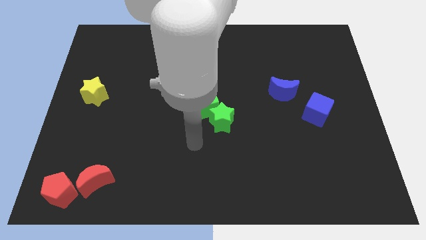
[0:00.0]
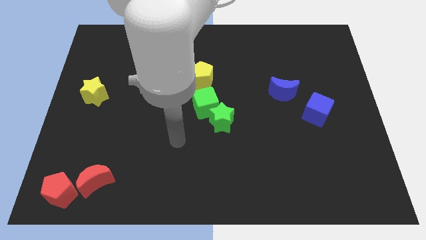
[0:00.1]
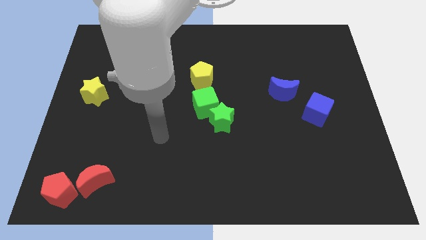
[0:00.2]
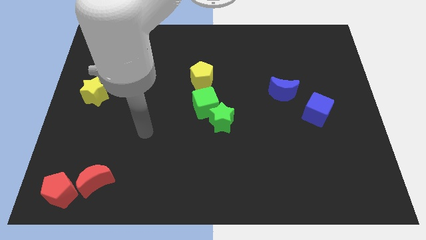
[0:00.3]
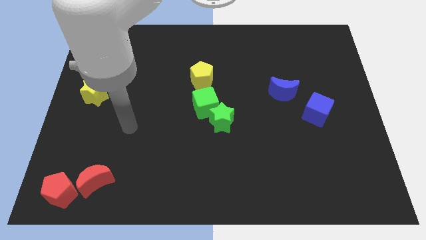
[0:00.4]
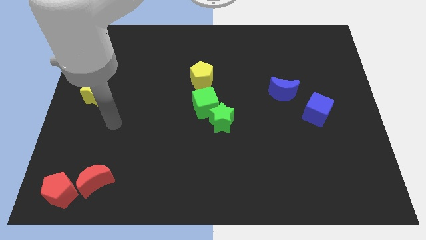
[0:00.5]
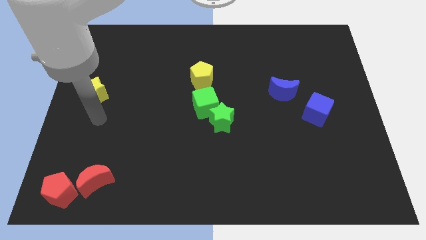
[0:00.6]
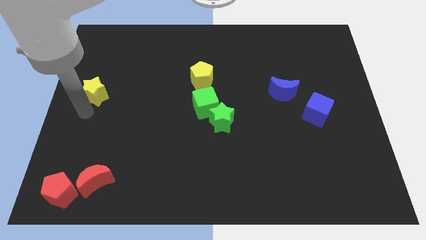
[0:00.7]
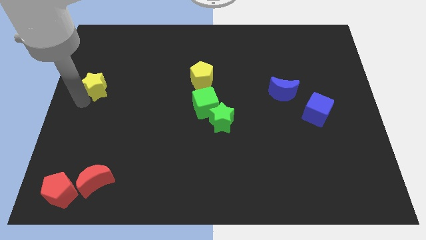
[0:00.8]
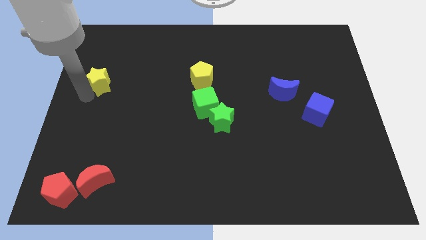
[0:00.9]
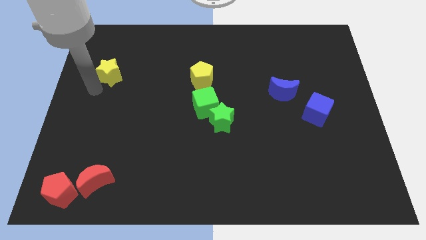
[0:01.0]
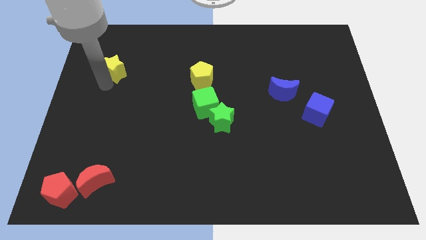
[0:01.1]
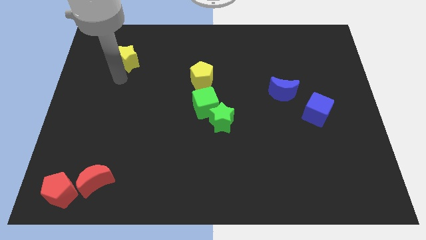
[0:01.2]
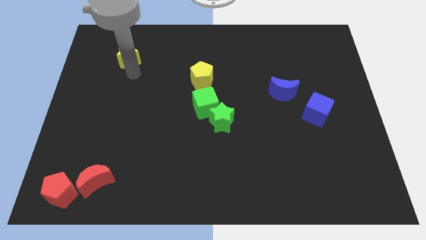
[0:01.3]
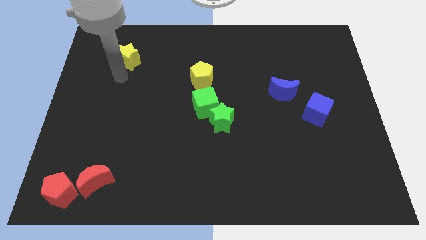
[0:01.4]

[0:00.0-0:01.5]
push the yellow star upwards

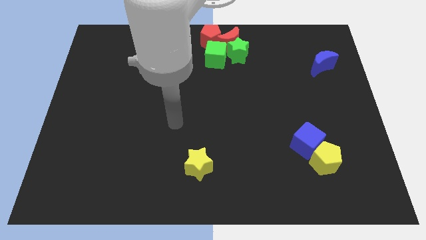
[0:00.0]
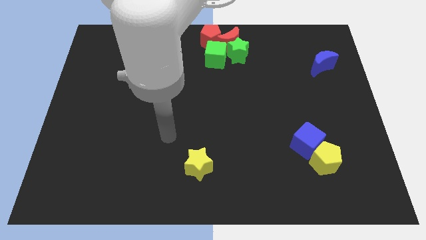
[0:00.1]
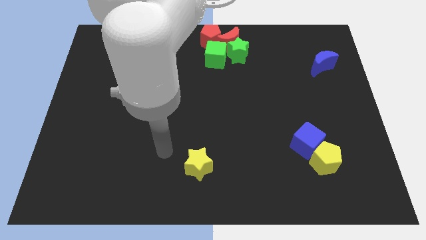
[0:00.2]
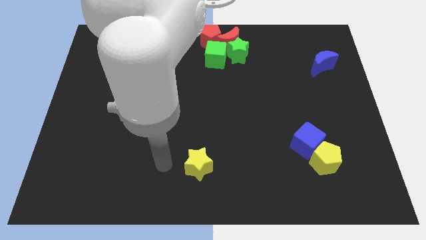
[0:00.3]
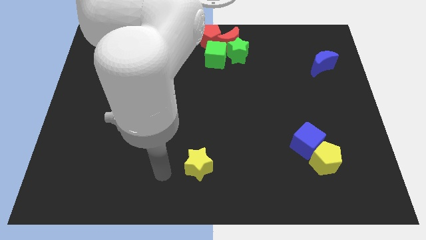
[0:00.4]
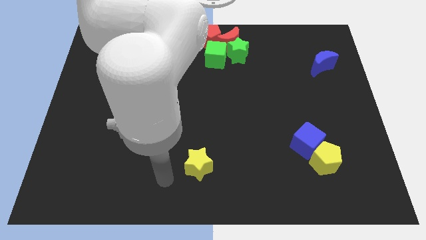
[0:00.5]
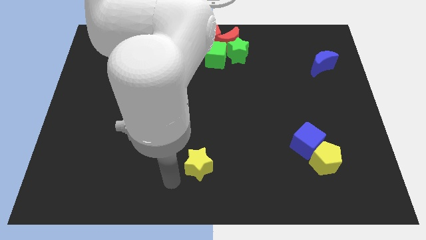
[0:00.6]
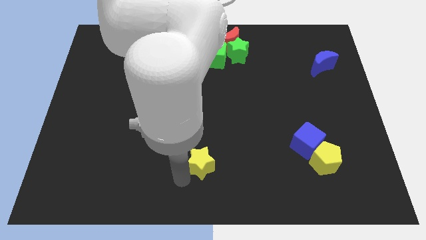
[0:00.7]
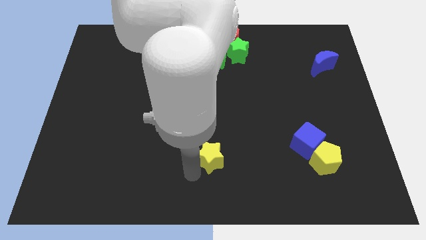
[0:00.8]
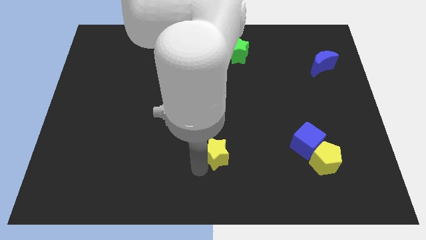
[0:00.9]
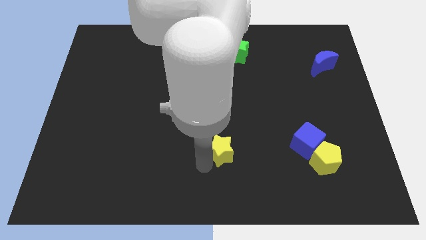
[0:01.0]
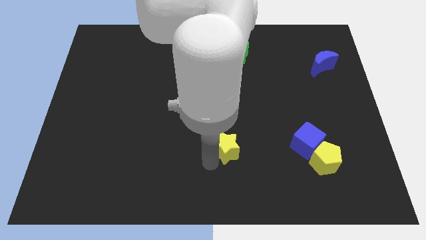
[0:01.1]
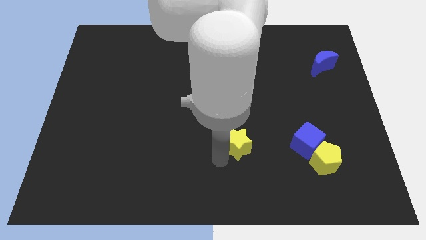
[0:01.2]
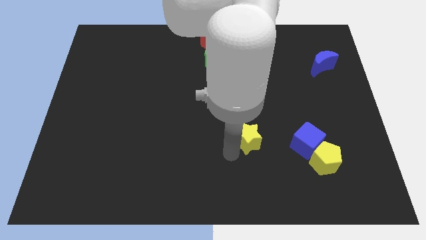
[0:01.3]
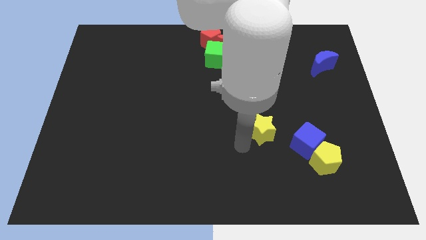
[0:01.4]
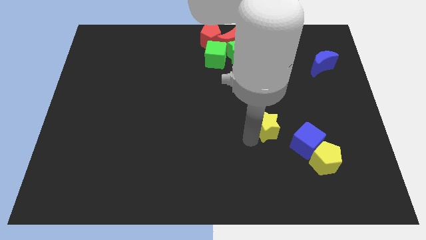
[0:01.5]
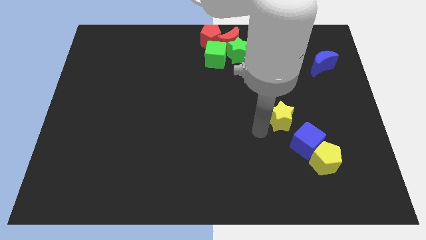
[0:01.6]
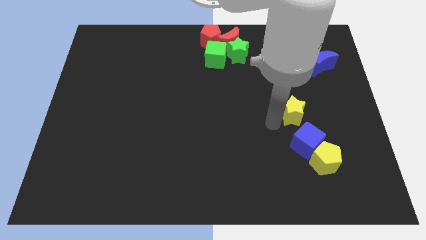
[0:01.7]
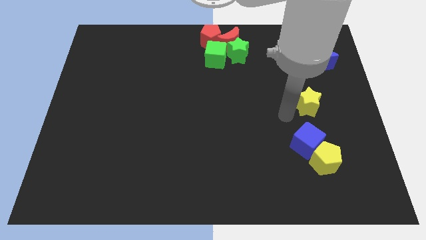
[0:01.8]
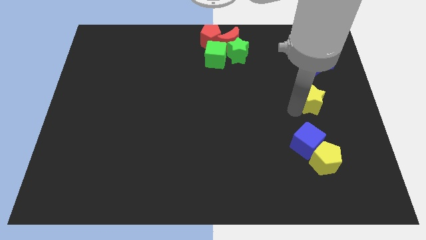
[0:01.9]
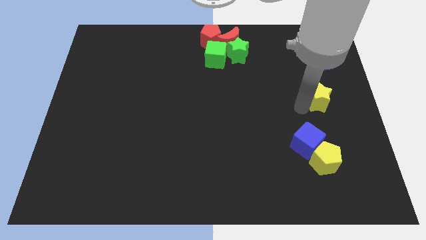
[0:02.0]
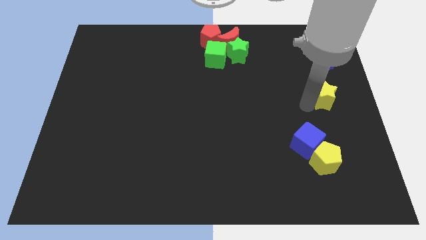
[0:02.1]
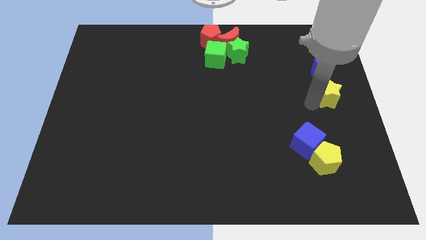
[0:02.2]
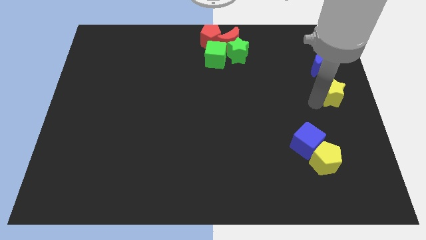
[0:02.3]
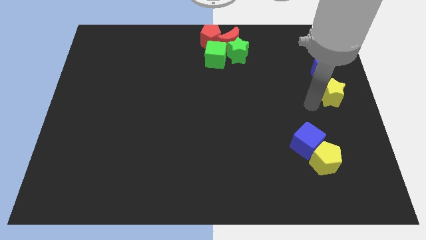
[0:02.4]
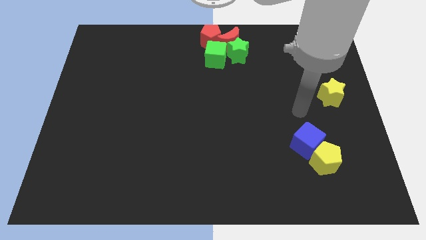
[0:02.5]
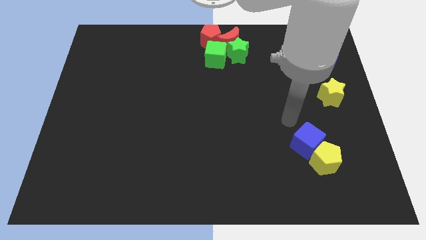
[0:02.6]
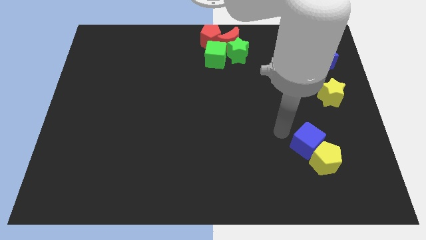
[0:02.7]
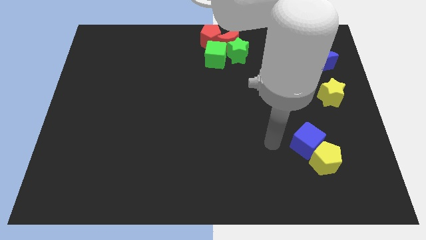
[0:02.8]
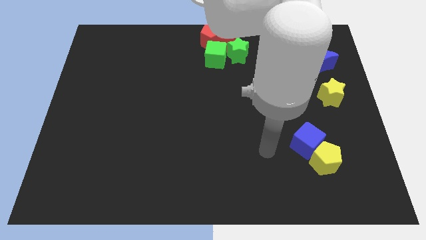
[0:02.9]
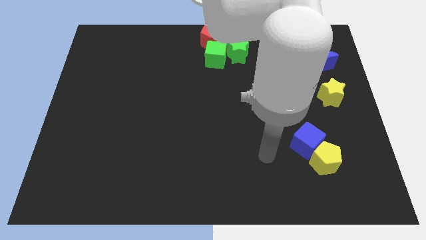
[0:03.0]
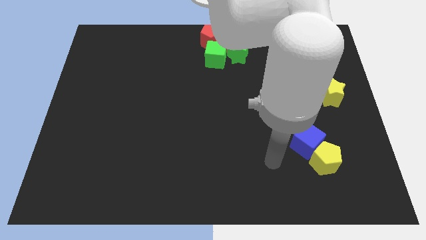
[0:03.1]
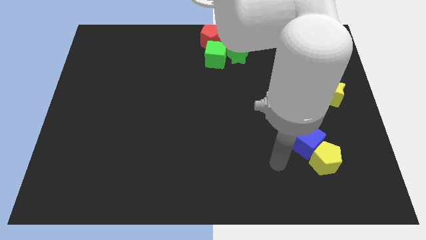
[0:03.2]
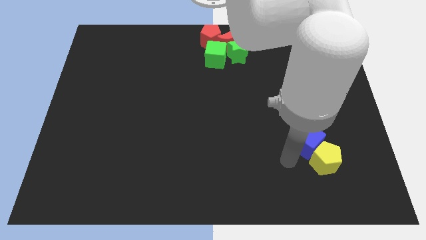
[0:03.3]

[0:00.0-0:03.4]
move yellow star towards the right centre of the board

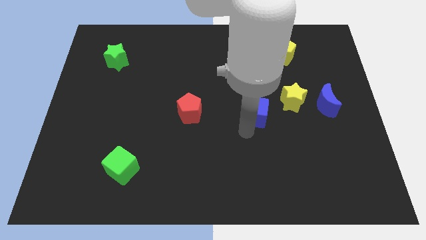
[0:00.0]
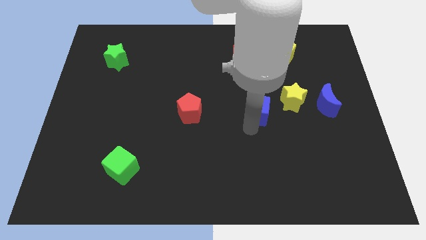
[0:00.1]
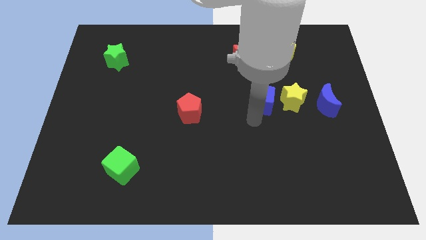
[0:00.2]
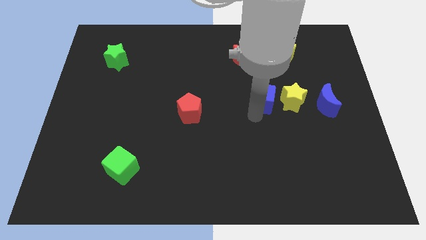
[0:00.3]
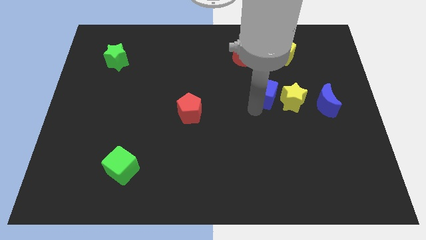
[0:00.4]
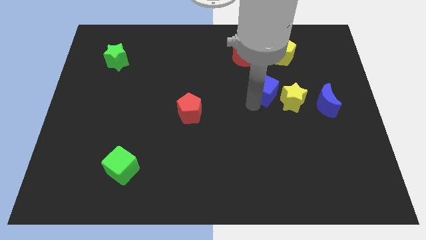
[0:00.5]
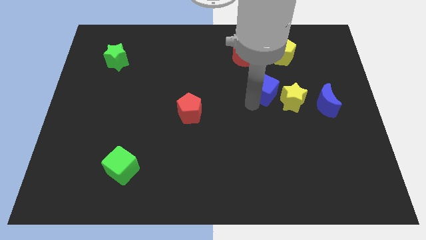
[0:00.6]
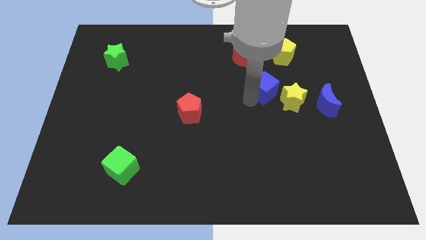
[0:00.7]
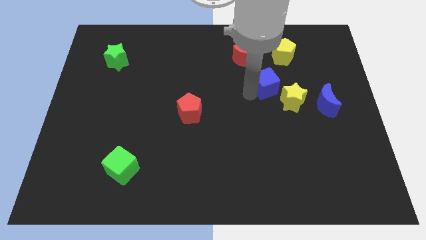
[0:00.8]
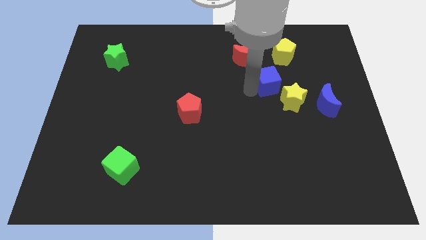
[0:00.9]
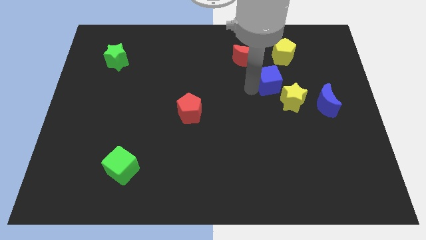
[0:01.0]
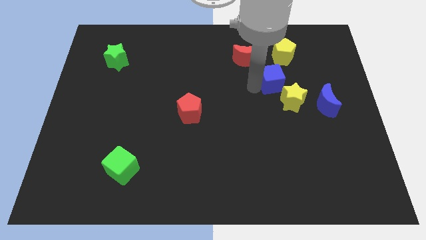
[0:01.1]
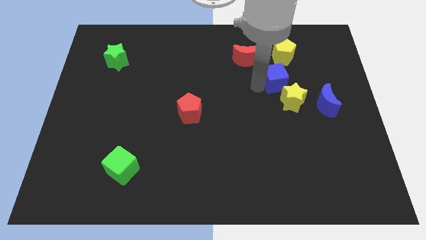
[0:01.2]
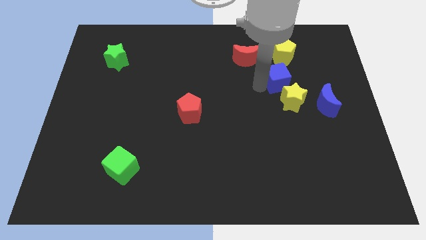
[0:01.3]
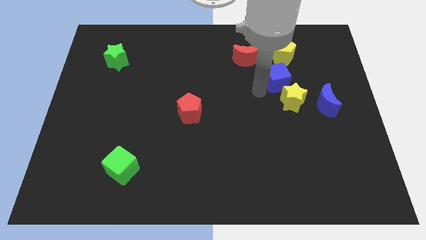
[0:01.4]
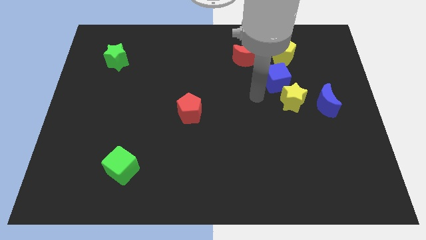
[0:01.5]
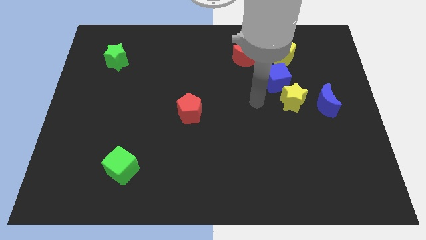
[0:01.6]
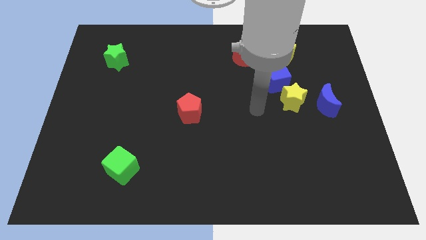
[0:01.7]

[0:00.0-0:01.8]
place the blue cube above the yellow star

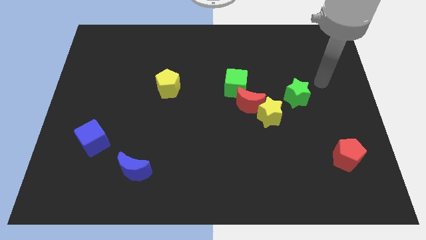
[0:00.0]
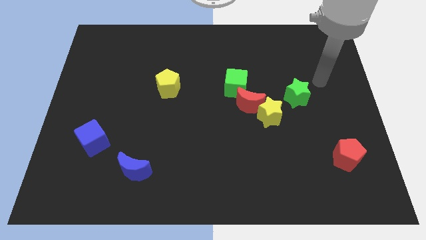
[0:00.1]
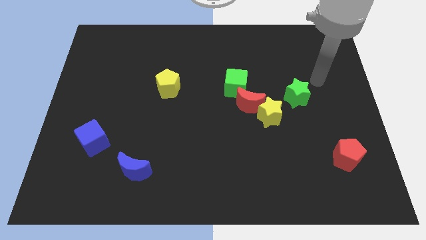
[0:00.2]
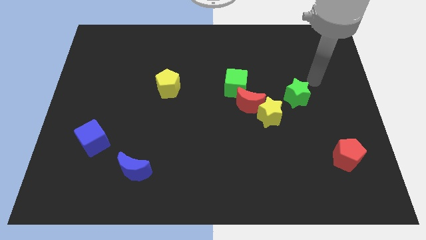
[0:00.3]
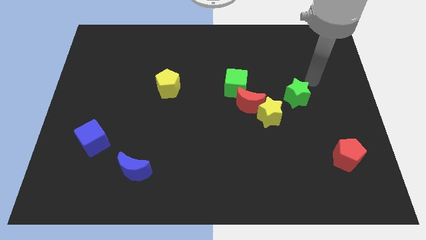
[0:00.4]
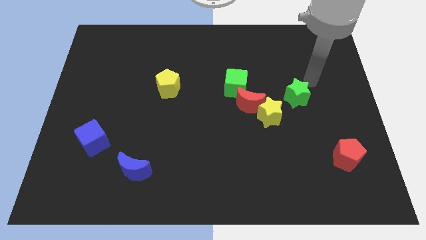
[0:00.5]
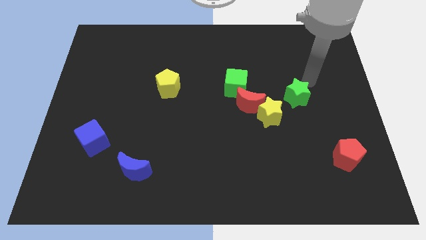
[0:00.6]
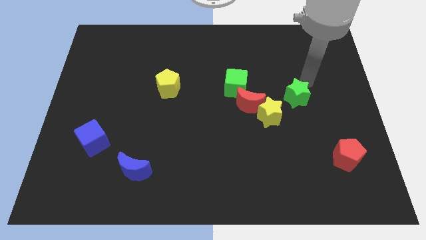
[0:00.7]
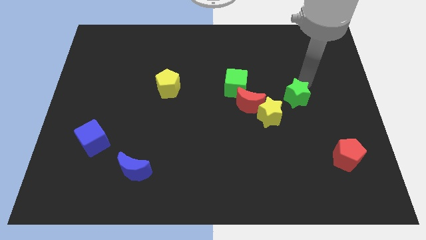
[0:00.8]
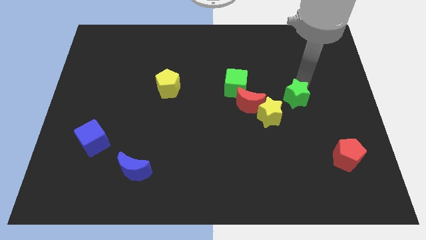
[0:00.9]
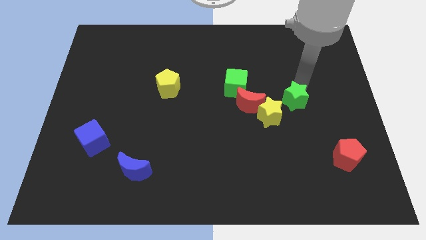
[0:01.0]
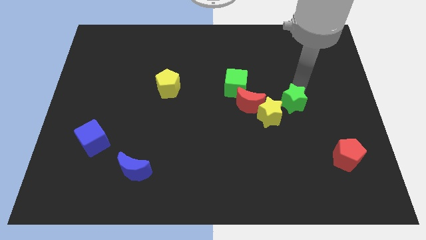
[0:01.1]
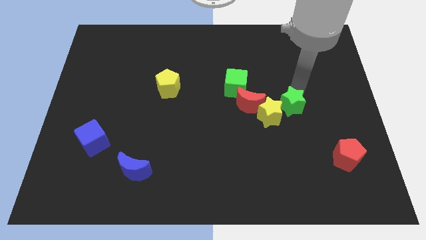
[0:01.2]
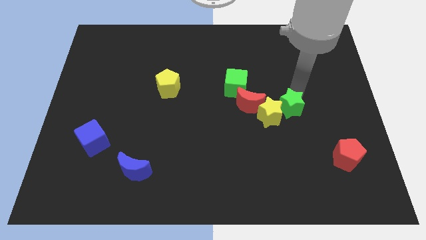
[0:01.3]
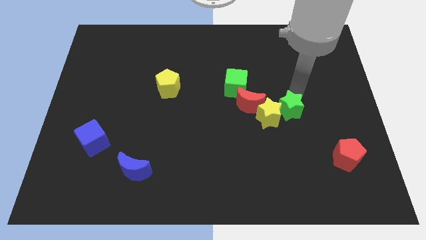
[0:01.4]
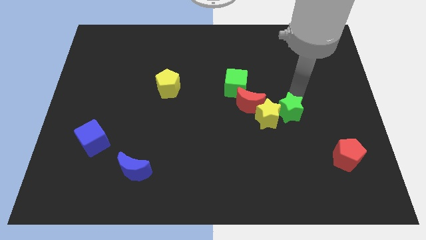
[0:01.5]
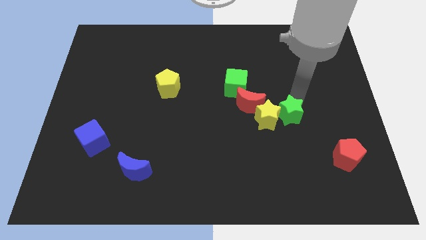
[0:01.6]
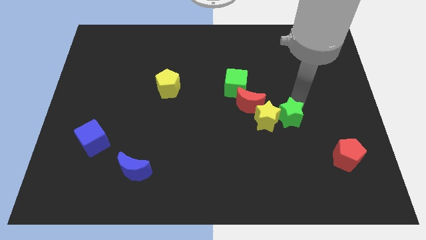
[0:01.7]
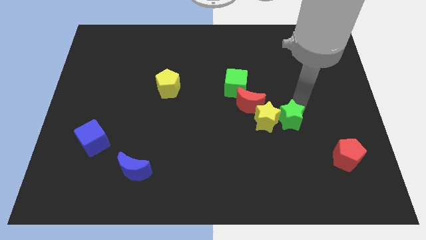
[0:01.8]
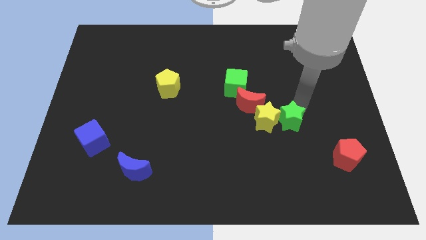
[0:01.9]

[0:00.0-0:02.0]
move the green star into the yellow star

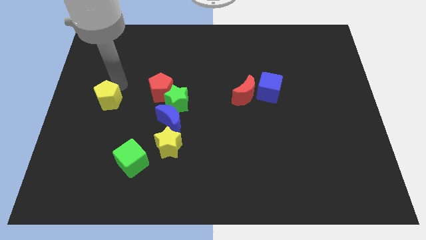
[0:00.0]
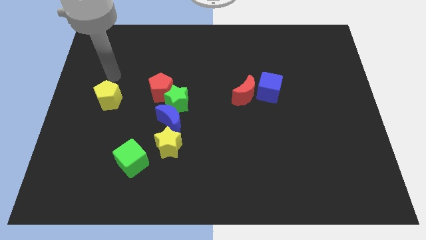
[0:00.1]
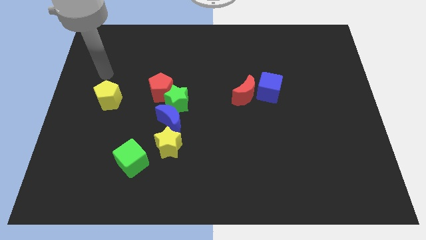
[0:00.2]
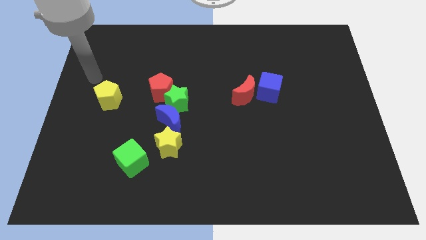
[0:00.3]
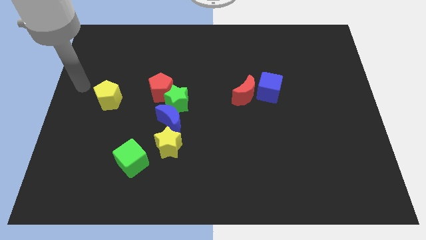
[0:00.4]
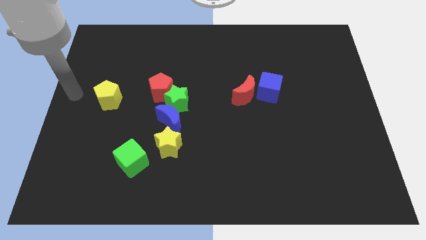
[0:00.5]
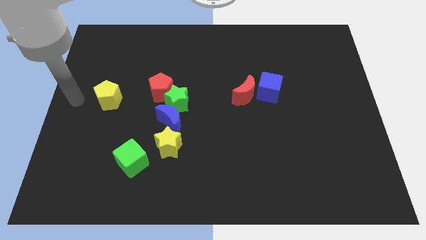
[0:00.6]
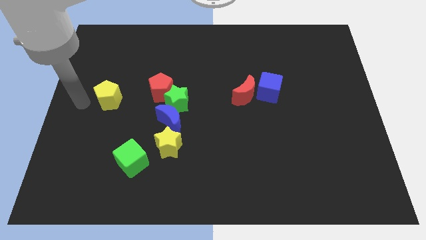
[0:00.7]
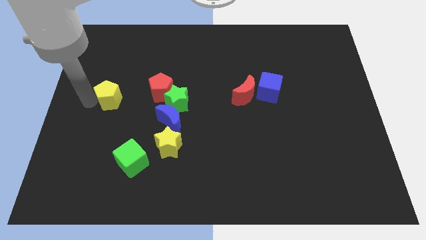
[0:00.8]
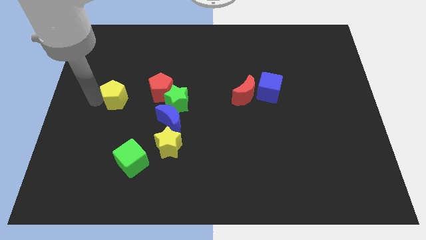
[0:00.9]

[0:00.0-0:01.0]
place the arm left to the yellow pentagon
